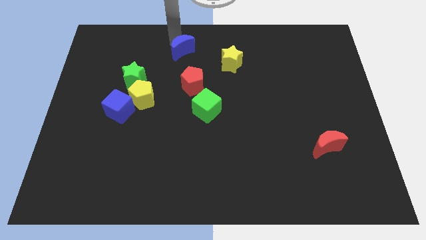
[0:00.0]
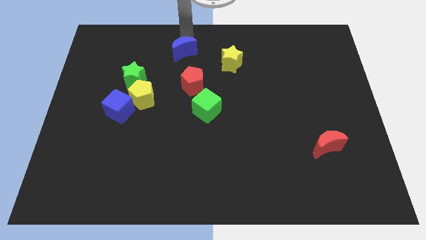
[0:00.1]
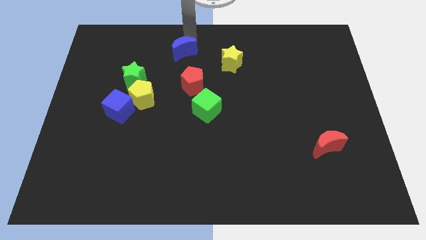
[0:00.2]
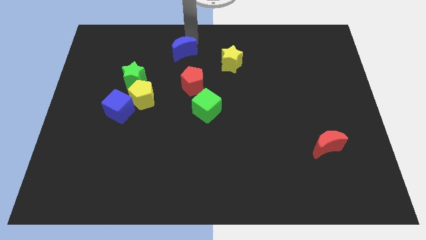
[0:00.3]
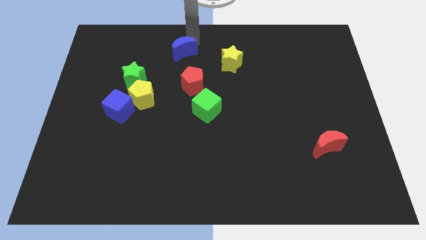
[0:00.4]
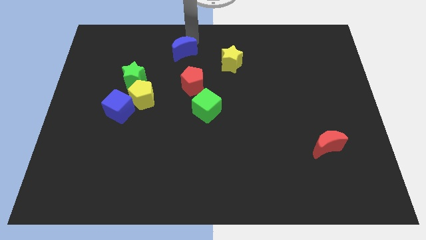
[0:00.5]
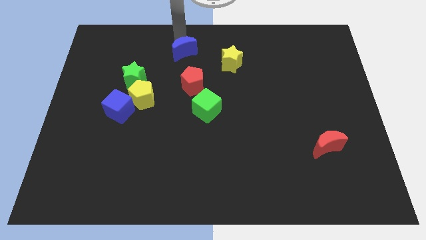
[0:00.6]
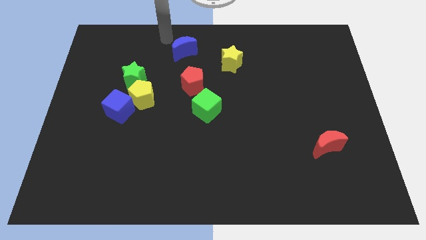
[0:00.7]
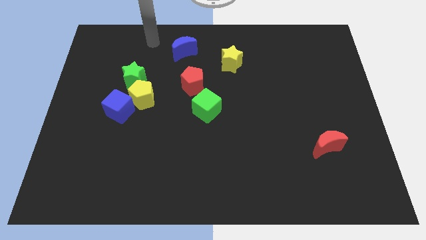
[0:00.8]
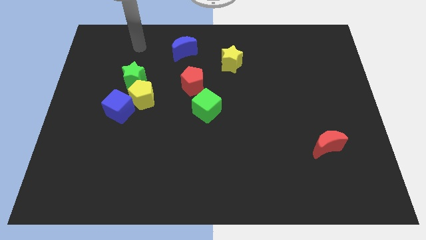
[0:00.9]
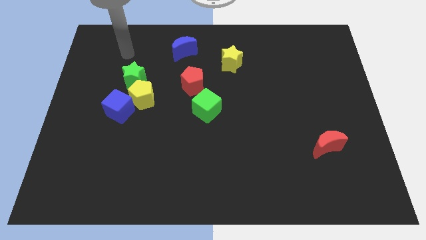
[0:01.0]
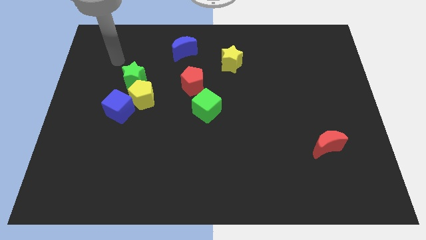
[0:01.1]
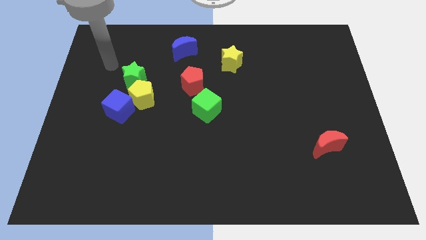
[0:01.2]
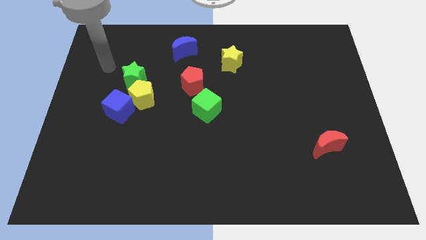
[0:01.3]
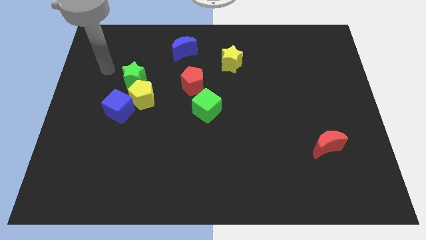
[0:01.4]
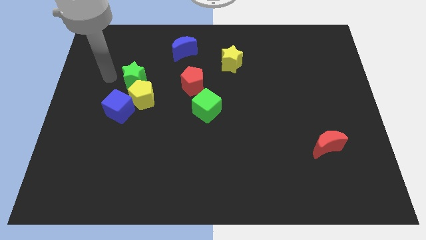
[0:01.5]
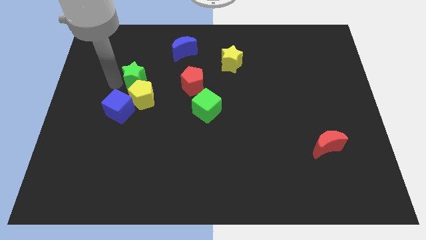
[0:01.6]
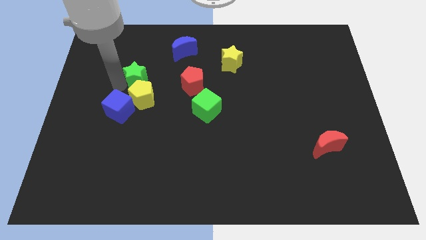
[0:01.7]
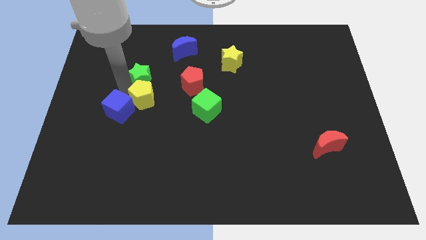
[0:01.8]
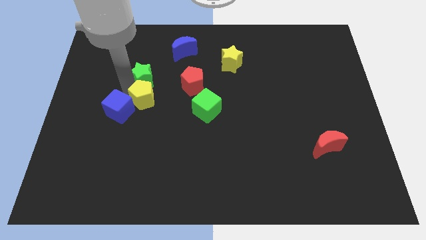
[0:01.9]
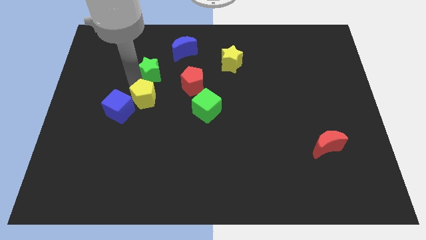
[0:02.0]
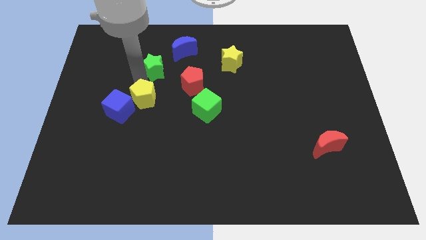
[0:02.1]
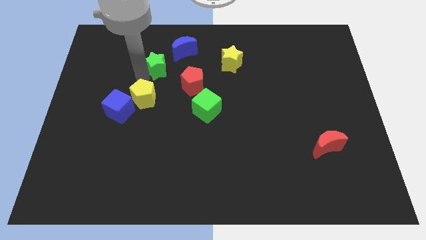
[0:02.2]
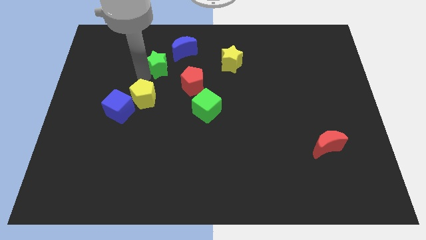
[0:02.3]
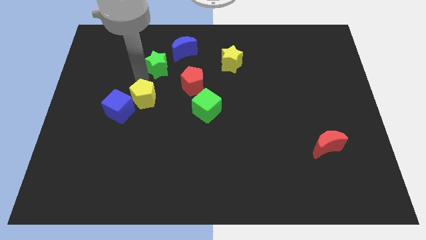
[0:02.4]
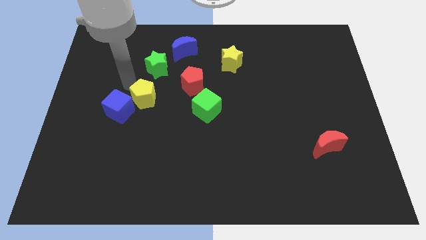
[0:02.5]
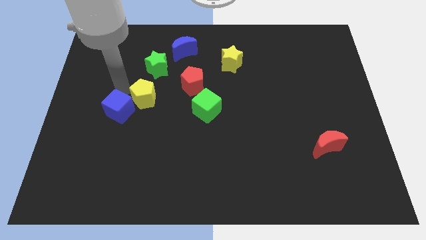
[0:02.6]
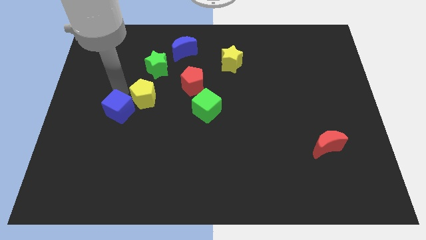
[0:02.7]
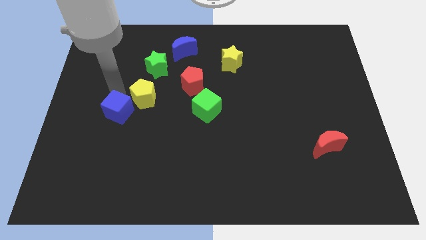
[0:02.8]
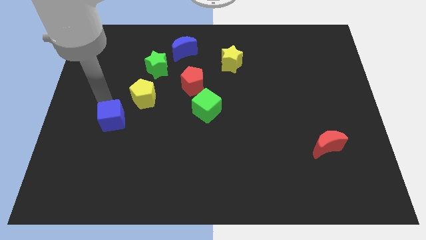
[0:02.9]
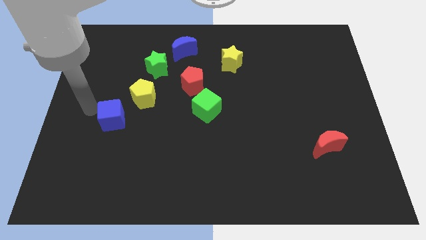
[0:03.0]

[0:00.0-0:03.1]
separate green star blue cube away from yellow pentagon

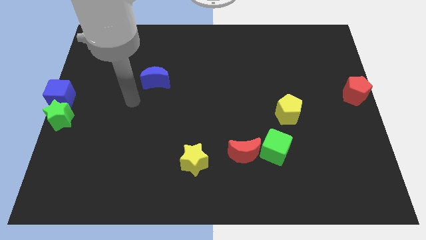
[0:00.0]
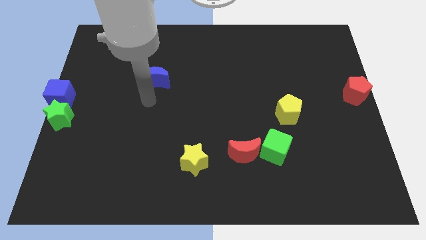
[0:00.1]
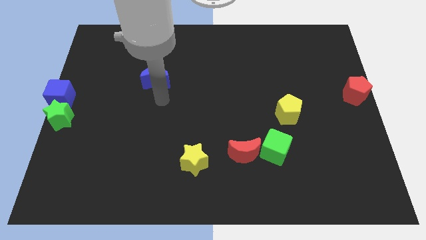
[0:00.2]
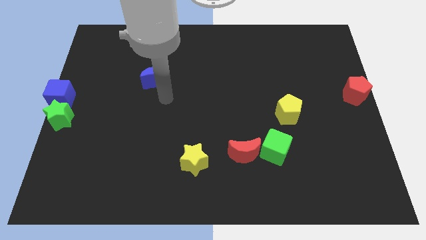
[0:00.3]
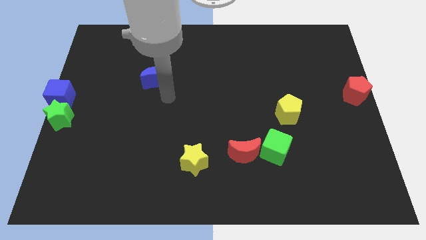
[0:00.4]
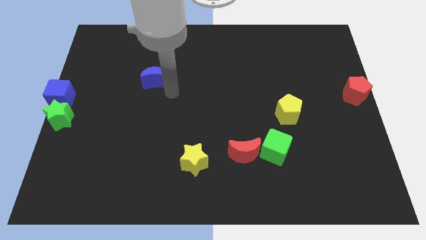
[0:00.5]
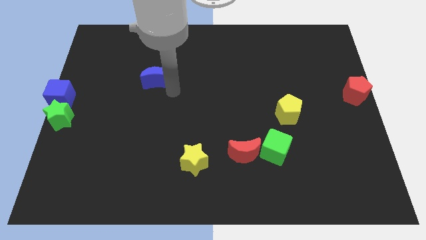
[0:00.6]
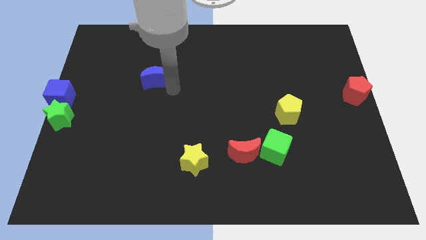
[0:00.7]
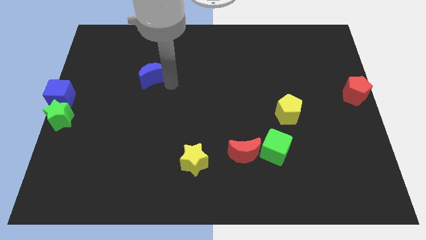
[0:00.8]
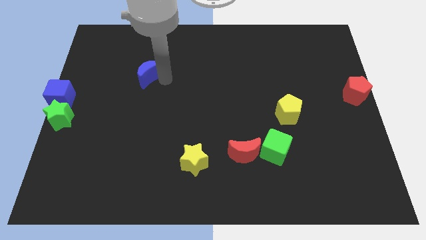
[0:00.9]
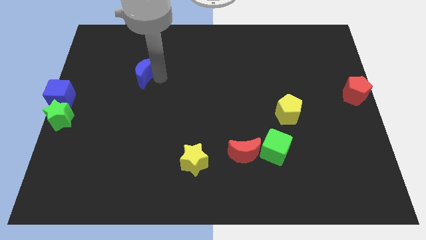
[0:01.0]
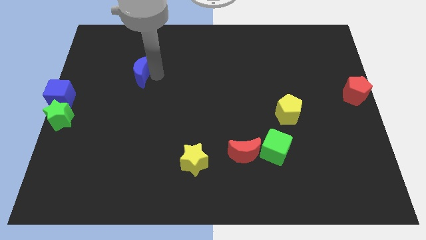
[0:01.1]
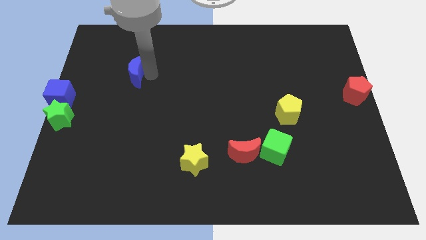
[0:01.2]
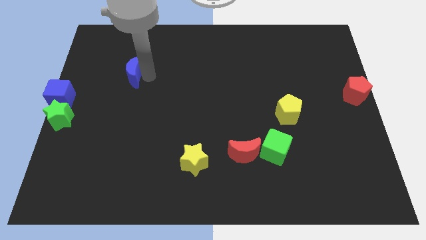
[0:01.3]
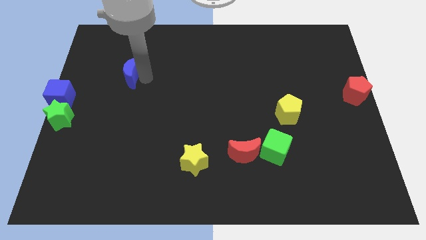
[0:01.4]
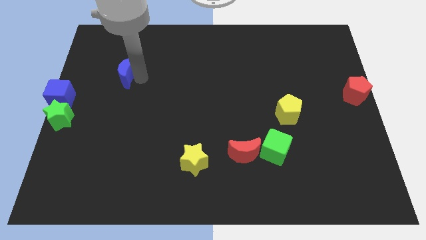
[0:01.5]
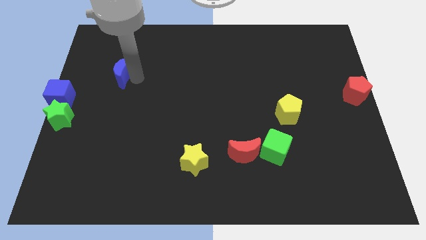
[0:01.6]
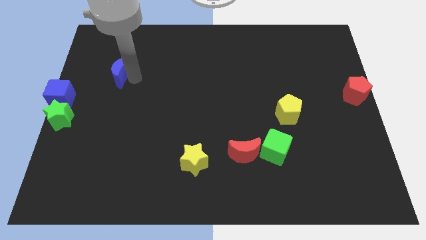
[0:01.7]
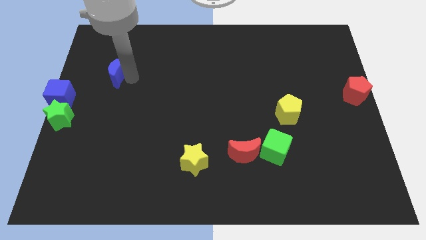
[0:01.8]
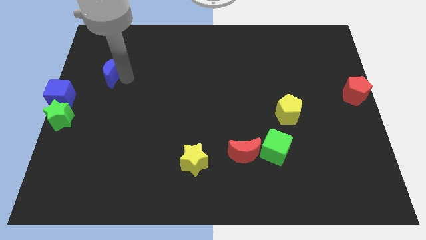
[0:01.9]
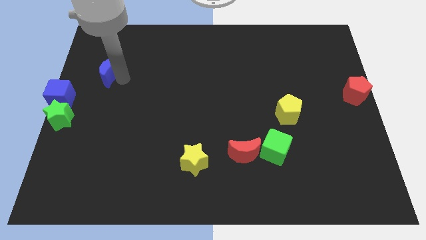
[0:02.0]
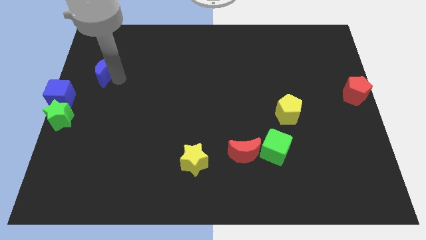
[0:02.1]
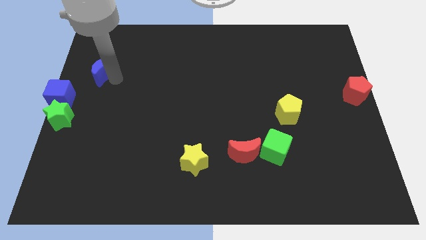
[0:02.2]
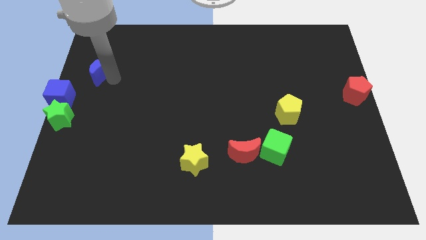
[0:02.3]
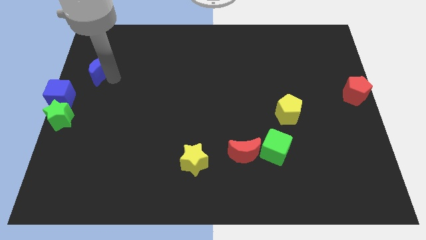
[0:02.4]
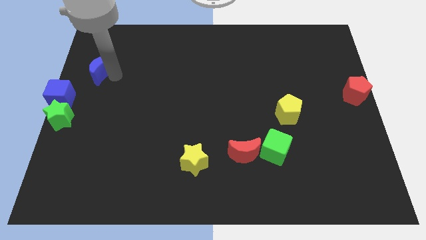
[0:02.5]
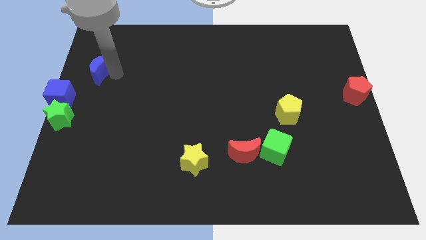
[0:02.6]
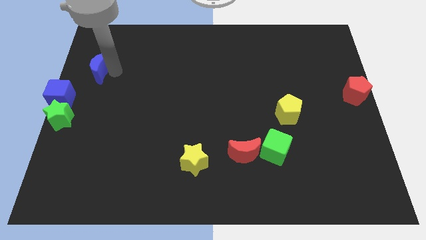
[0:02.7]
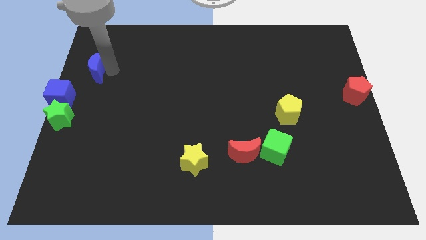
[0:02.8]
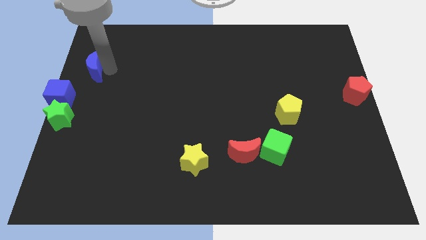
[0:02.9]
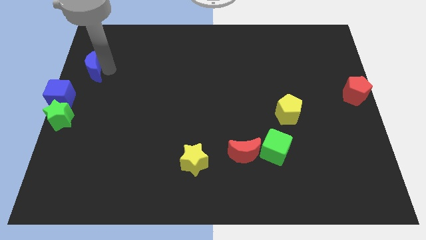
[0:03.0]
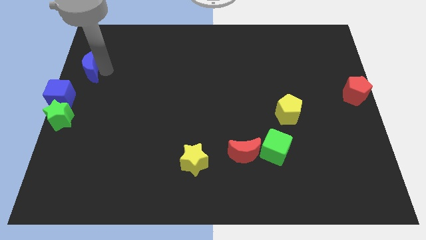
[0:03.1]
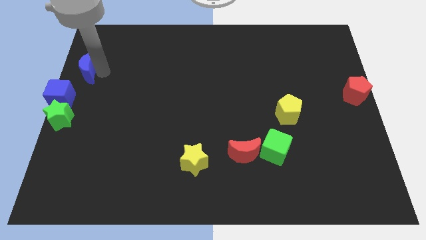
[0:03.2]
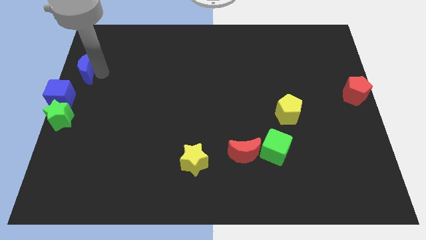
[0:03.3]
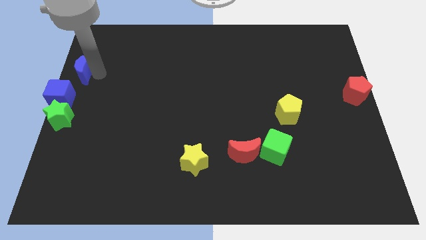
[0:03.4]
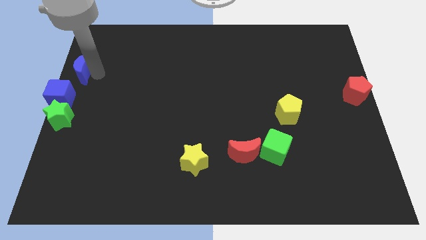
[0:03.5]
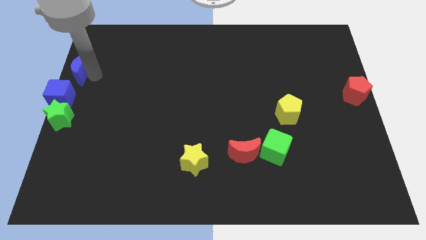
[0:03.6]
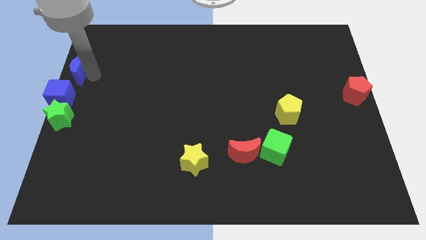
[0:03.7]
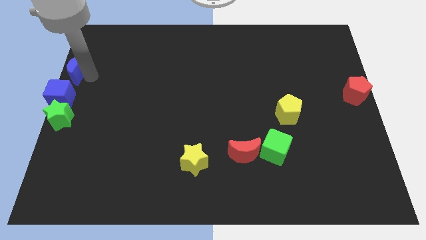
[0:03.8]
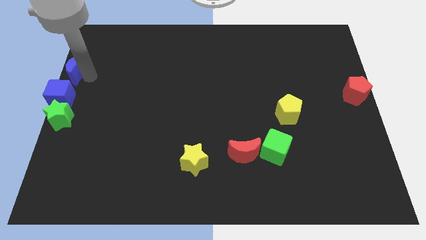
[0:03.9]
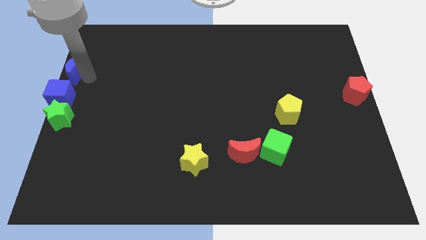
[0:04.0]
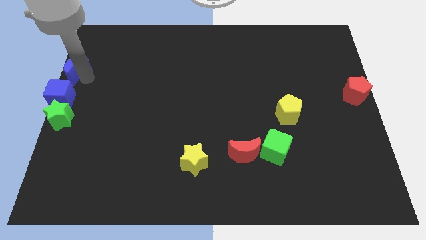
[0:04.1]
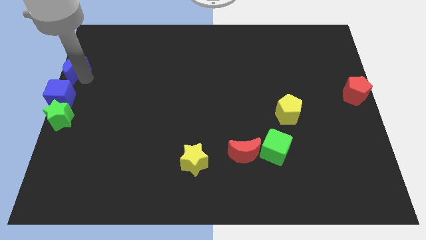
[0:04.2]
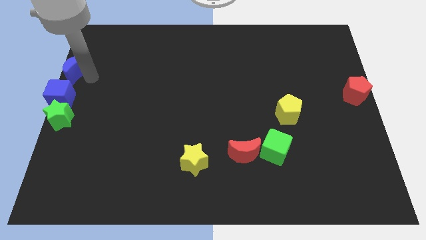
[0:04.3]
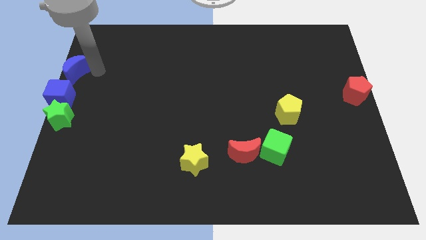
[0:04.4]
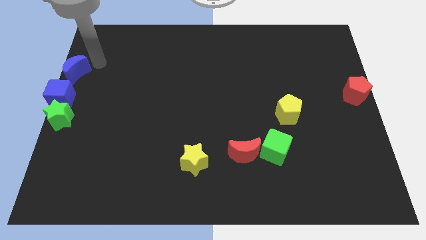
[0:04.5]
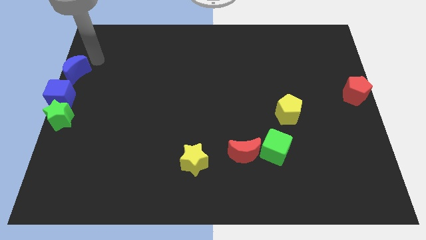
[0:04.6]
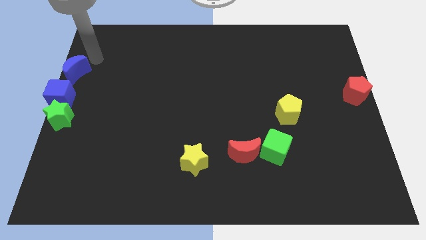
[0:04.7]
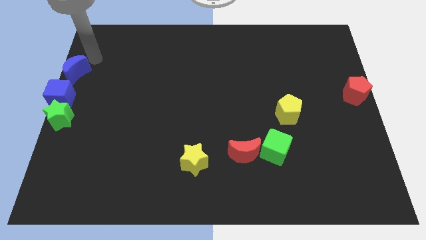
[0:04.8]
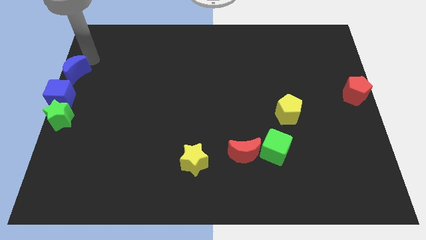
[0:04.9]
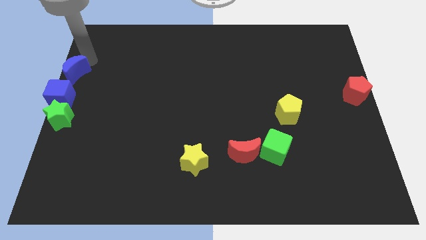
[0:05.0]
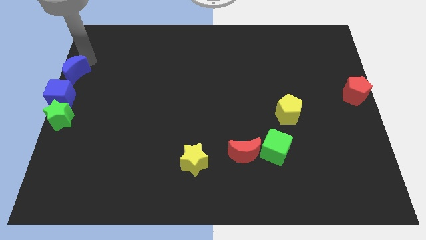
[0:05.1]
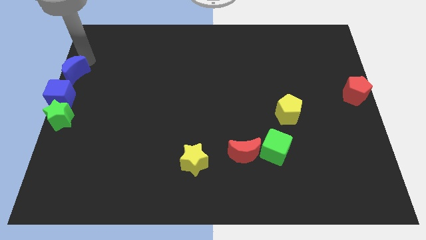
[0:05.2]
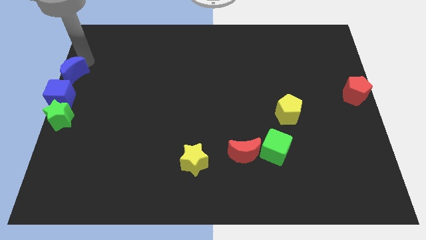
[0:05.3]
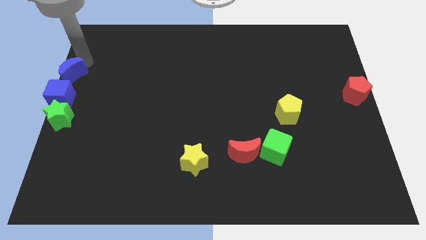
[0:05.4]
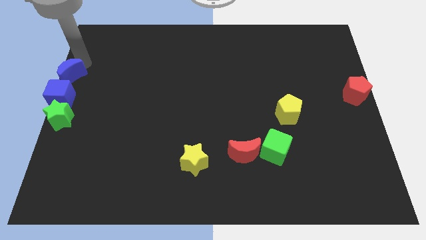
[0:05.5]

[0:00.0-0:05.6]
place the blue moon above the blue cube

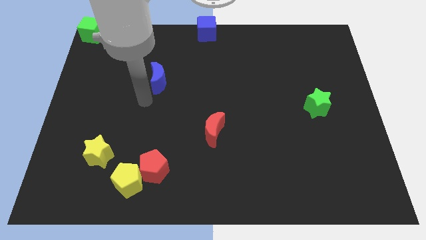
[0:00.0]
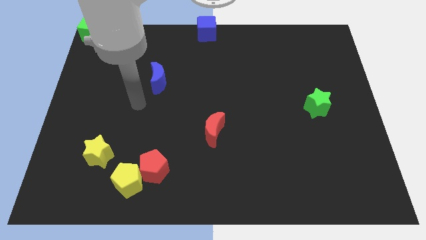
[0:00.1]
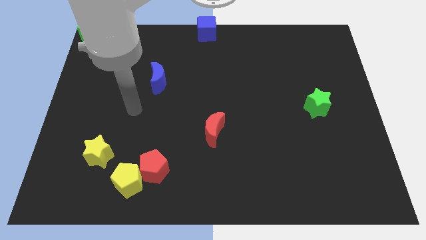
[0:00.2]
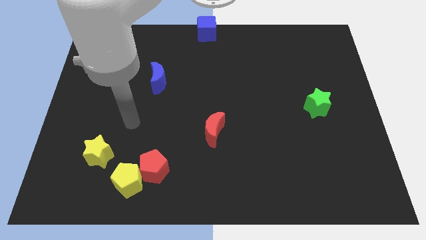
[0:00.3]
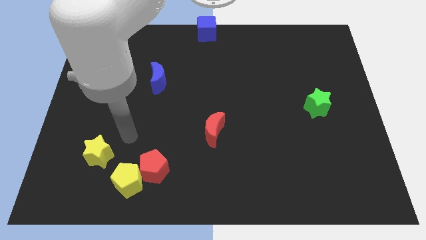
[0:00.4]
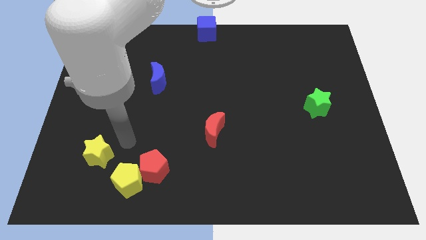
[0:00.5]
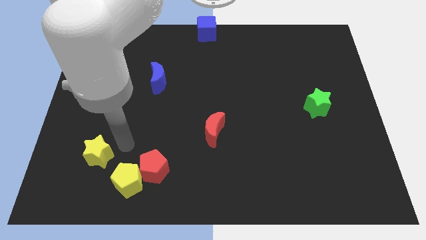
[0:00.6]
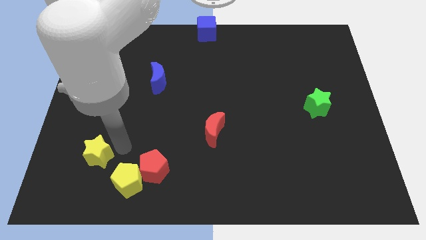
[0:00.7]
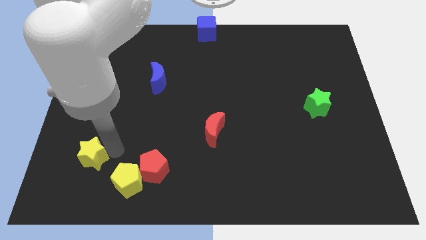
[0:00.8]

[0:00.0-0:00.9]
tap the yellow star
